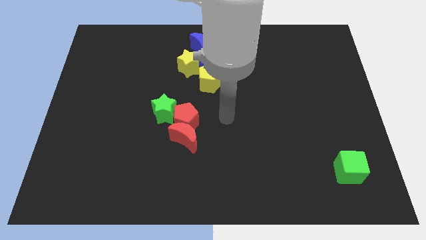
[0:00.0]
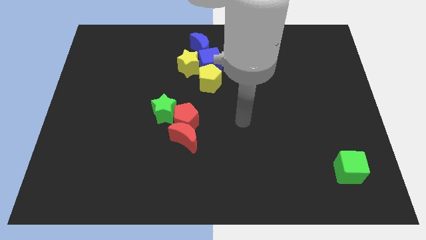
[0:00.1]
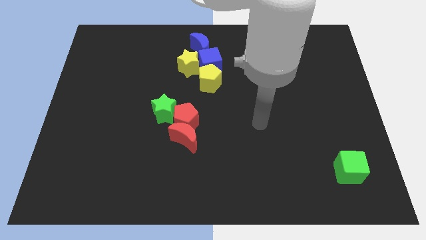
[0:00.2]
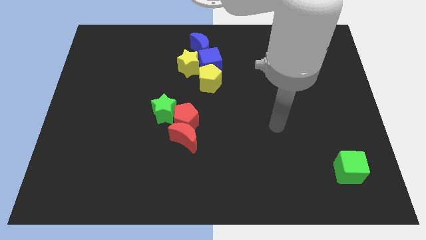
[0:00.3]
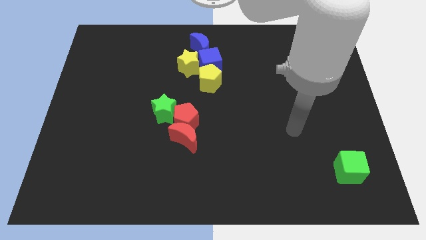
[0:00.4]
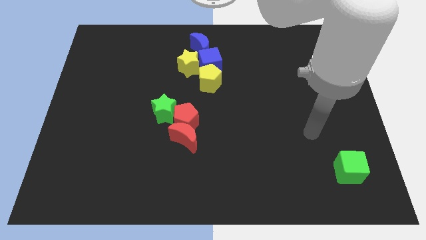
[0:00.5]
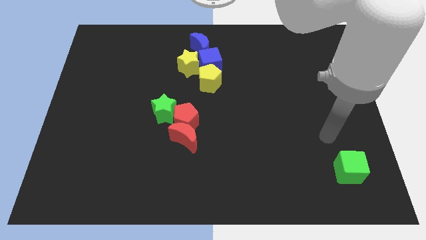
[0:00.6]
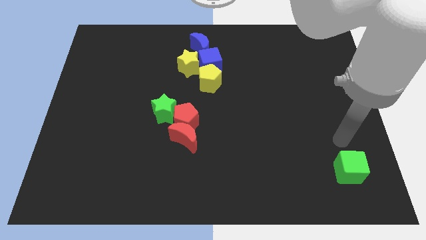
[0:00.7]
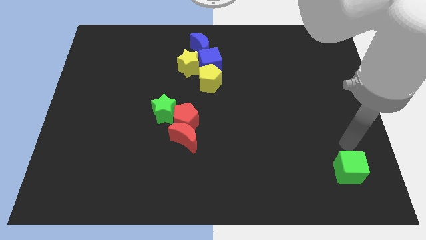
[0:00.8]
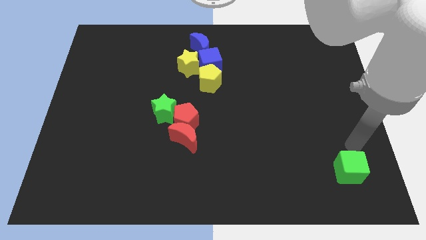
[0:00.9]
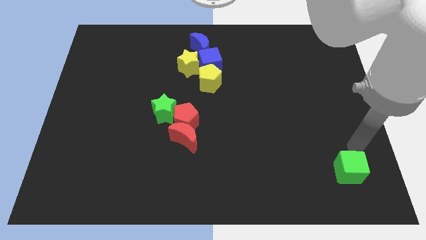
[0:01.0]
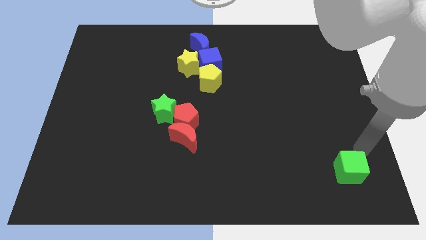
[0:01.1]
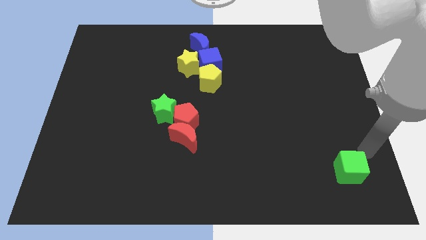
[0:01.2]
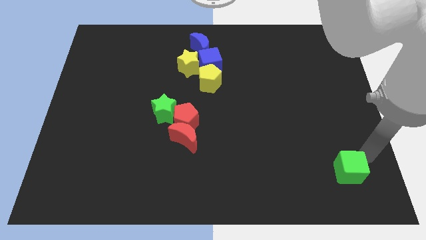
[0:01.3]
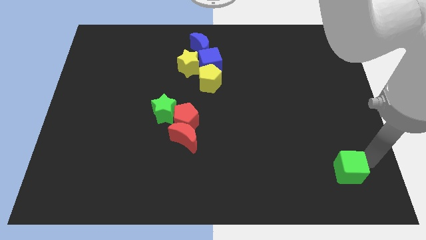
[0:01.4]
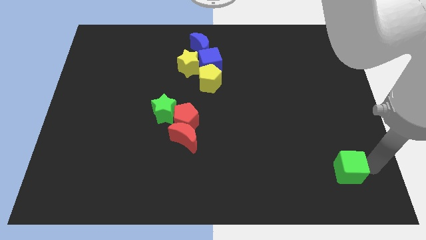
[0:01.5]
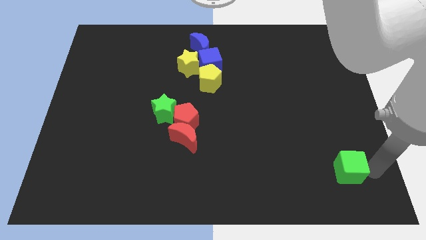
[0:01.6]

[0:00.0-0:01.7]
move the arm to the right of the green cube

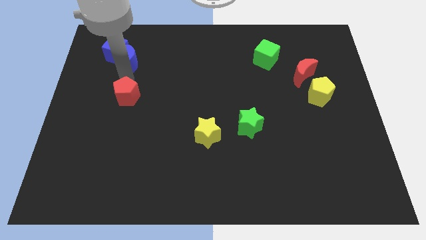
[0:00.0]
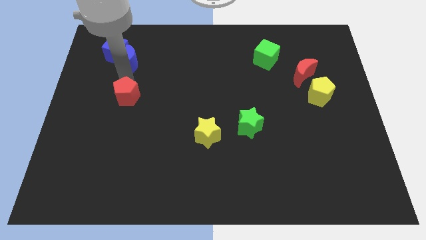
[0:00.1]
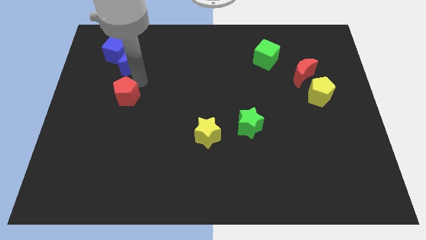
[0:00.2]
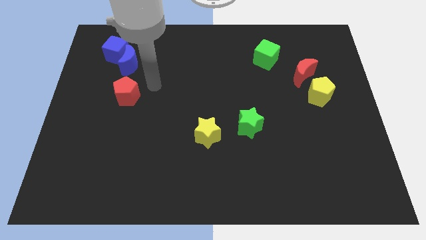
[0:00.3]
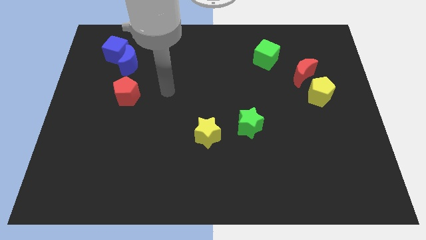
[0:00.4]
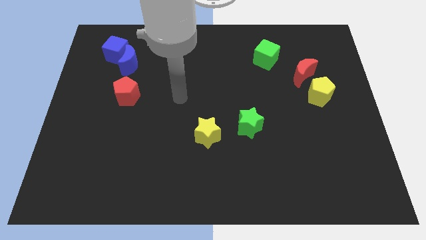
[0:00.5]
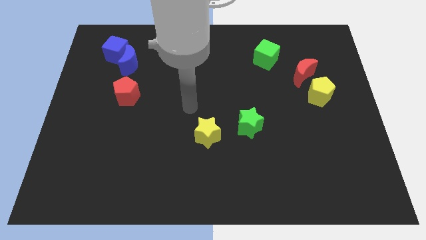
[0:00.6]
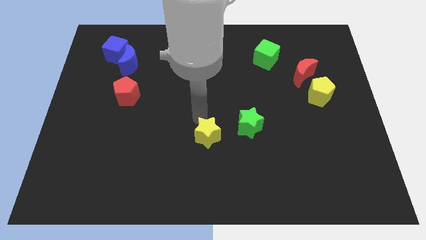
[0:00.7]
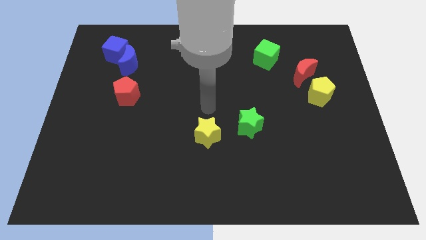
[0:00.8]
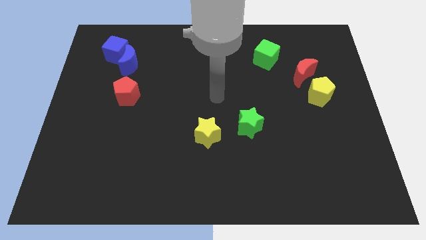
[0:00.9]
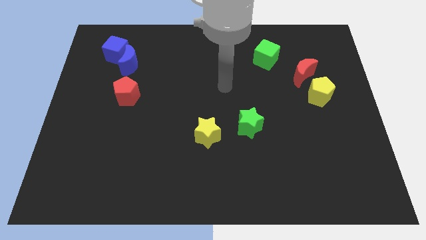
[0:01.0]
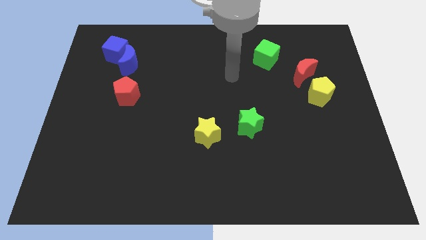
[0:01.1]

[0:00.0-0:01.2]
move your arm away from the blue crescent

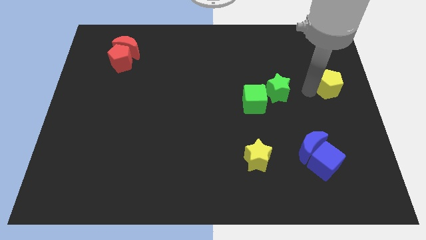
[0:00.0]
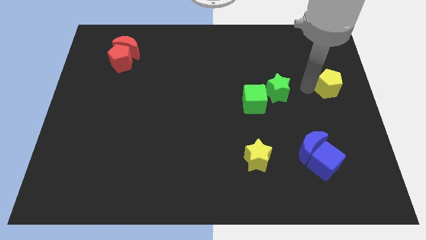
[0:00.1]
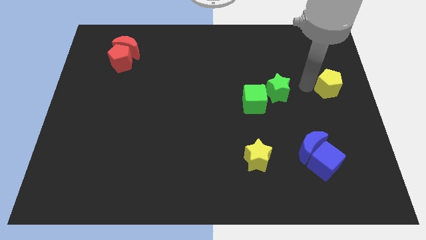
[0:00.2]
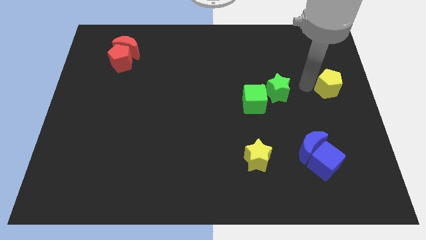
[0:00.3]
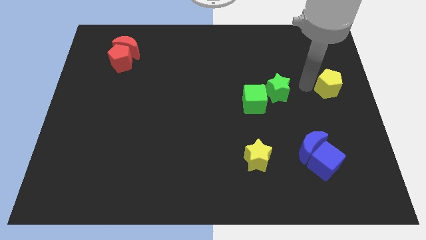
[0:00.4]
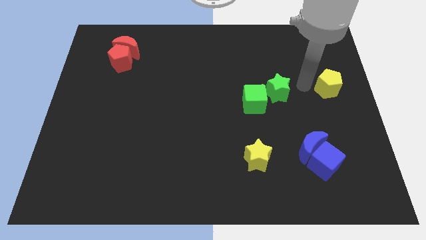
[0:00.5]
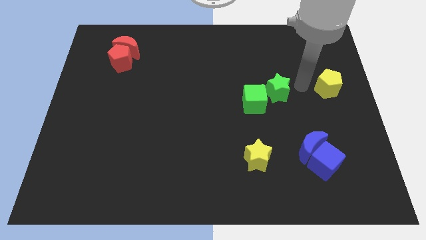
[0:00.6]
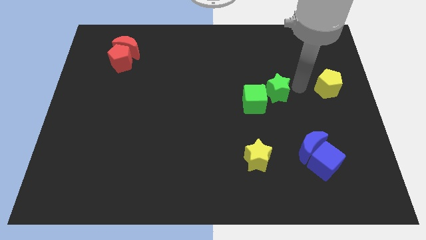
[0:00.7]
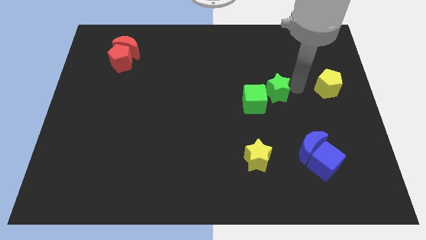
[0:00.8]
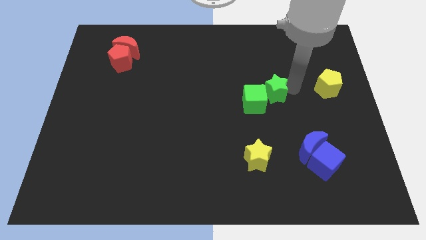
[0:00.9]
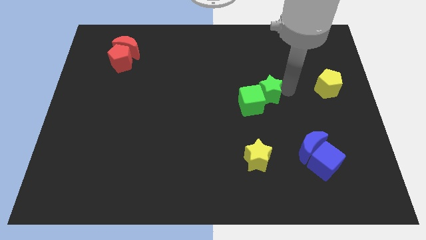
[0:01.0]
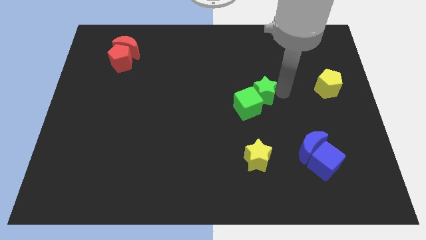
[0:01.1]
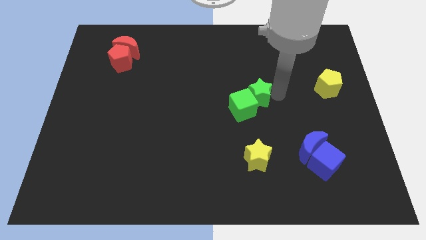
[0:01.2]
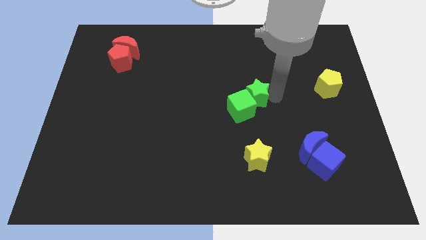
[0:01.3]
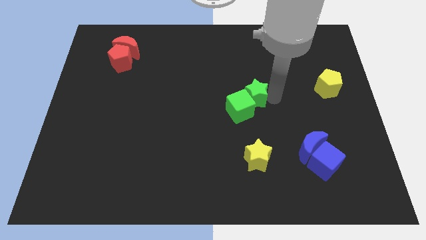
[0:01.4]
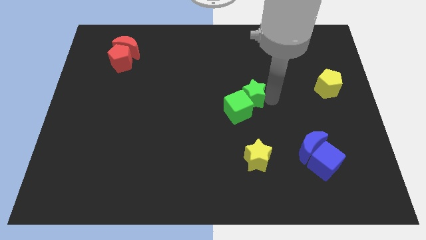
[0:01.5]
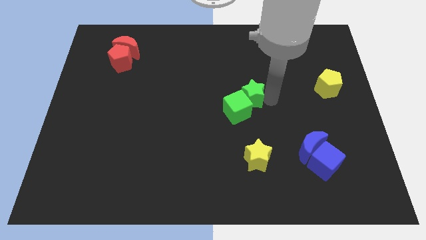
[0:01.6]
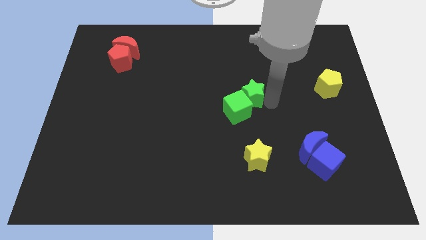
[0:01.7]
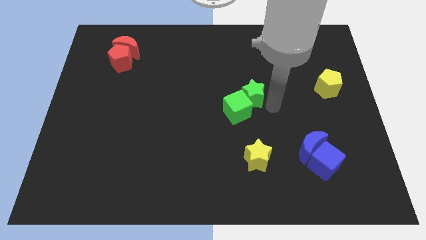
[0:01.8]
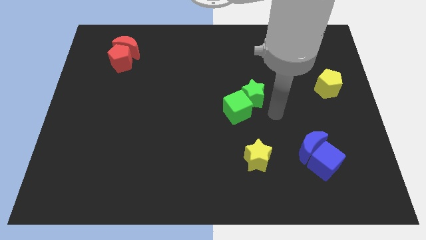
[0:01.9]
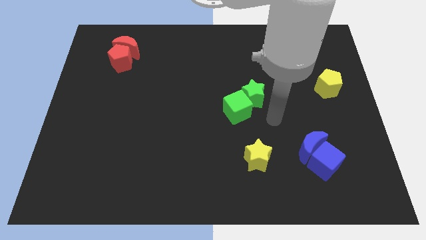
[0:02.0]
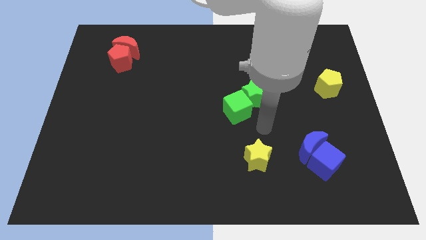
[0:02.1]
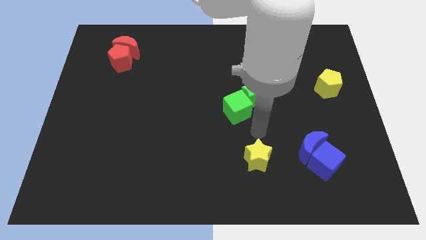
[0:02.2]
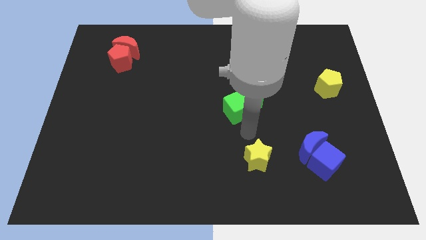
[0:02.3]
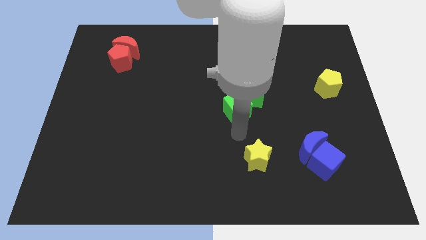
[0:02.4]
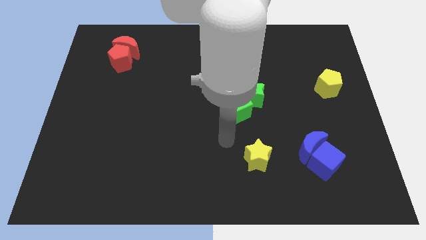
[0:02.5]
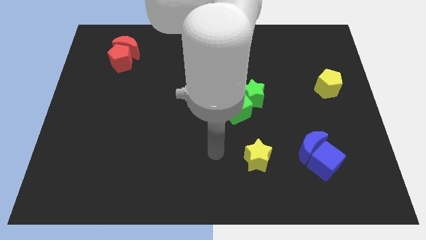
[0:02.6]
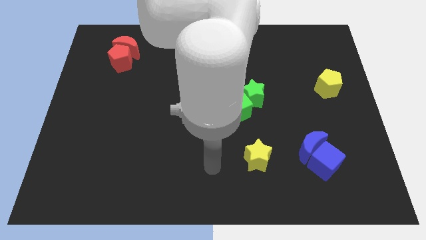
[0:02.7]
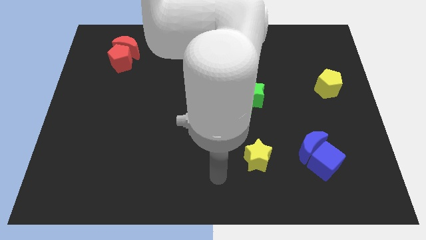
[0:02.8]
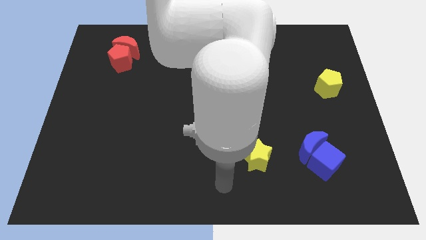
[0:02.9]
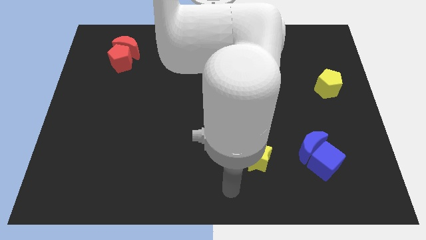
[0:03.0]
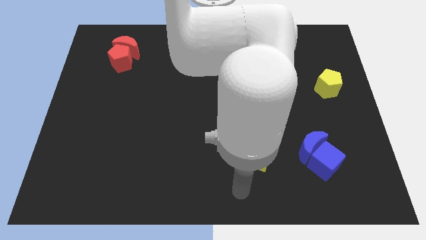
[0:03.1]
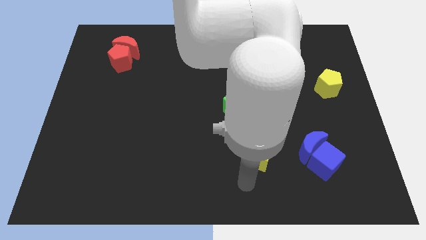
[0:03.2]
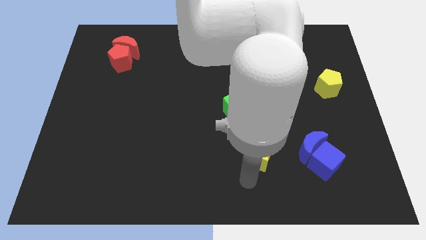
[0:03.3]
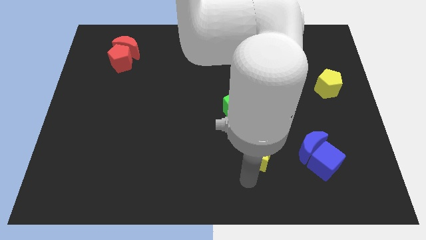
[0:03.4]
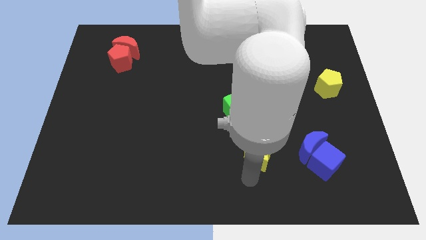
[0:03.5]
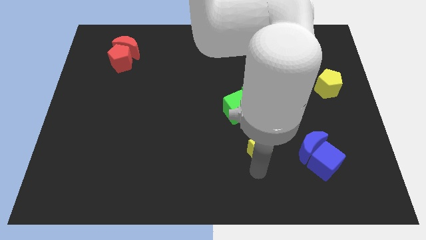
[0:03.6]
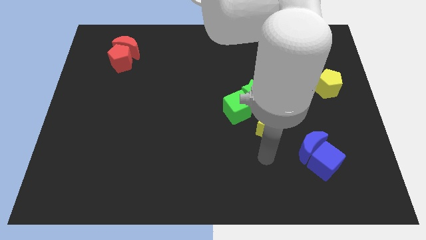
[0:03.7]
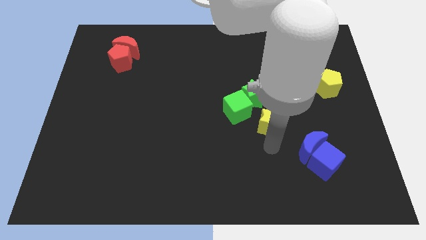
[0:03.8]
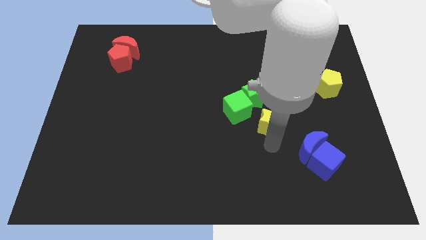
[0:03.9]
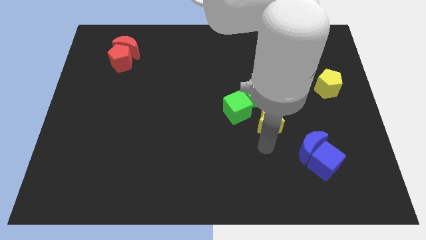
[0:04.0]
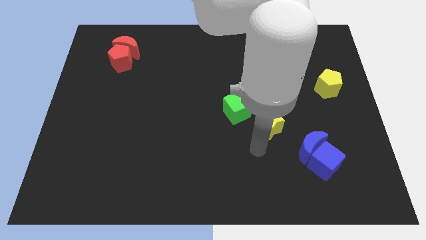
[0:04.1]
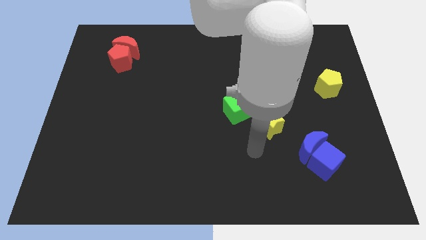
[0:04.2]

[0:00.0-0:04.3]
place the yellow star to the bottom of the green star

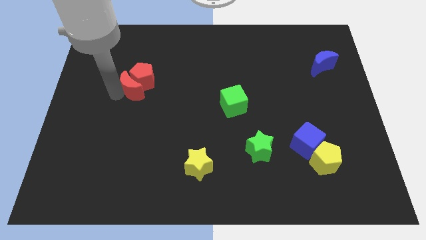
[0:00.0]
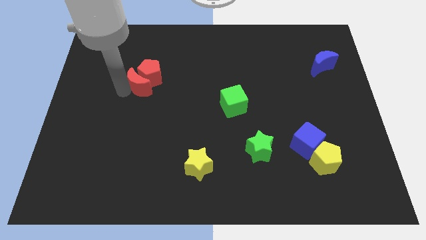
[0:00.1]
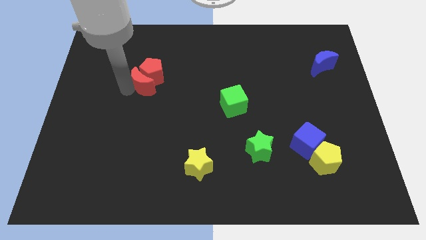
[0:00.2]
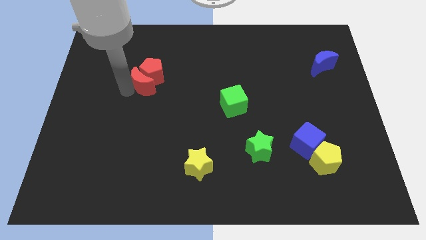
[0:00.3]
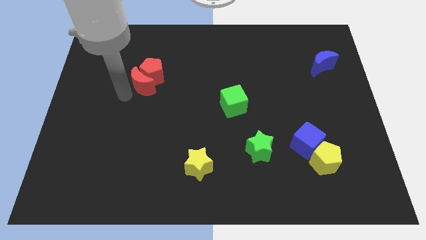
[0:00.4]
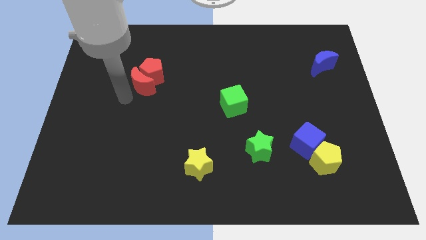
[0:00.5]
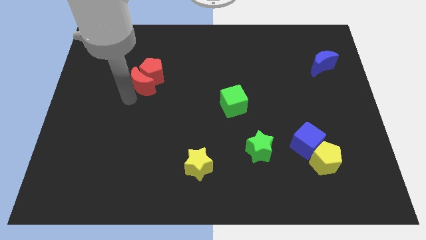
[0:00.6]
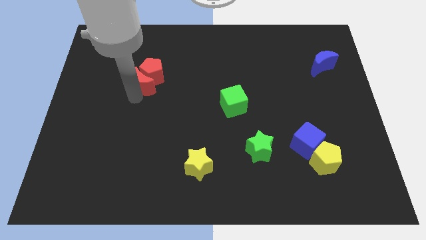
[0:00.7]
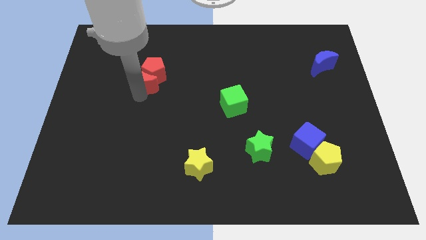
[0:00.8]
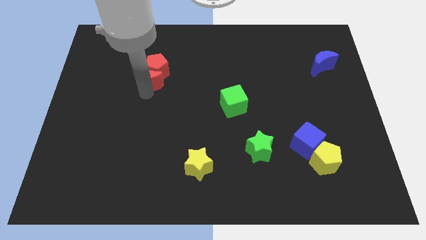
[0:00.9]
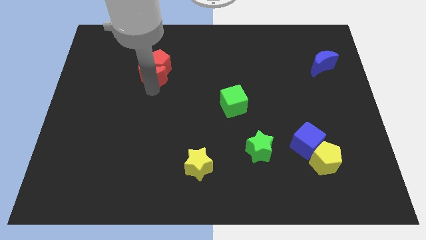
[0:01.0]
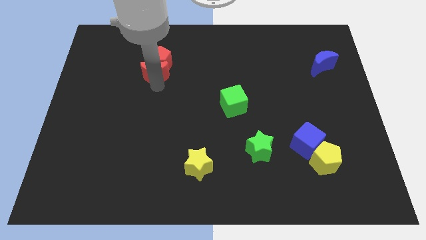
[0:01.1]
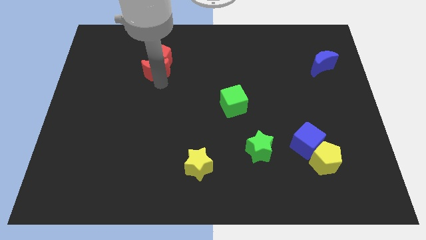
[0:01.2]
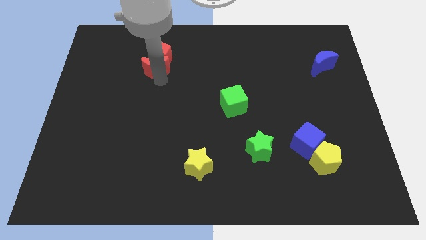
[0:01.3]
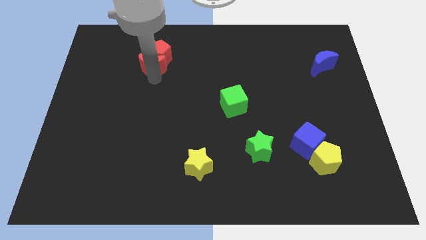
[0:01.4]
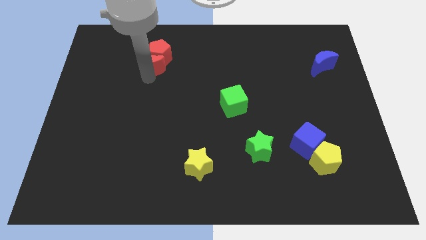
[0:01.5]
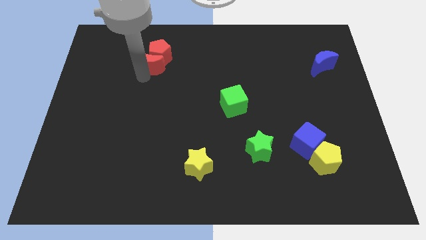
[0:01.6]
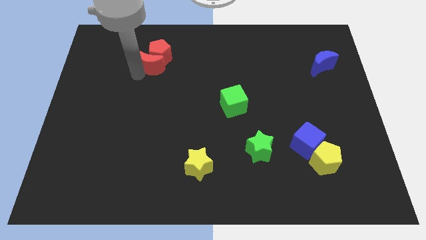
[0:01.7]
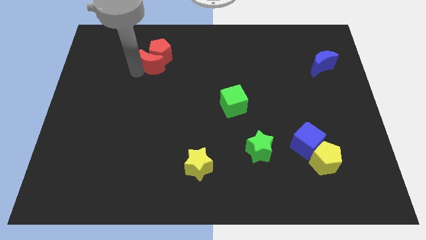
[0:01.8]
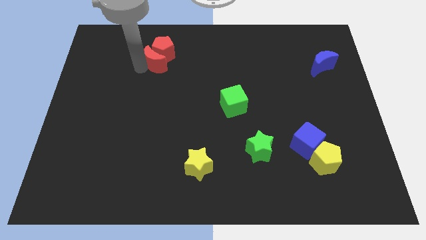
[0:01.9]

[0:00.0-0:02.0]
drag both the red blocks towards the top center
